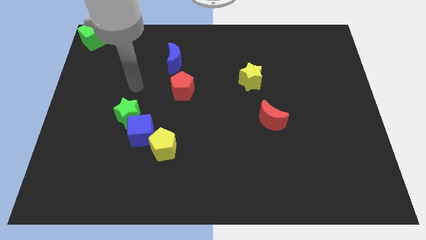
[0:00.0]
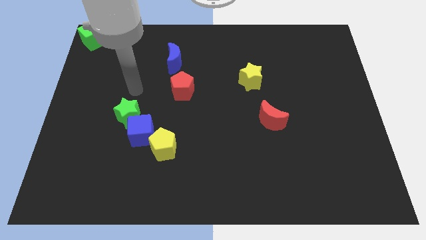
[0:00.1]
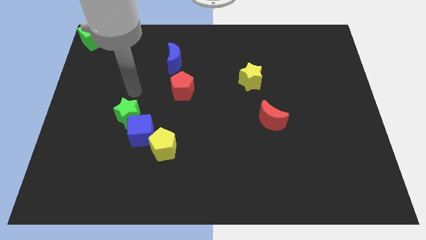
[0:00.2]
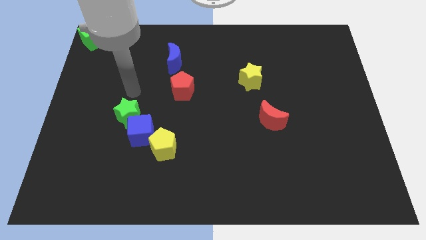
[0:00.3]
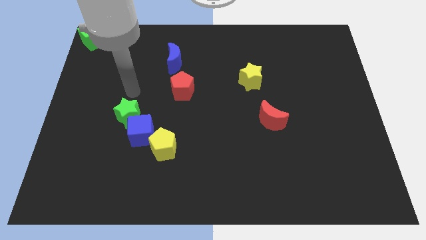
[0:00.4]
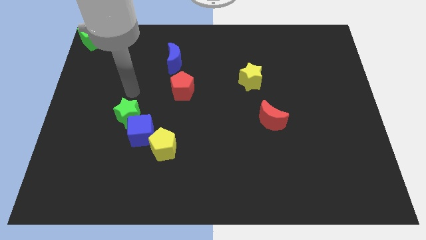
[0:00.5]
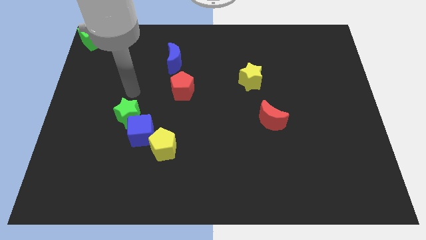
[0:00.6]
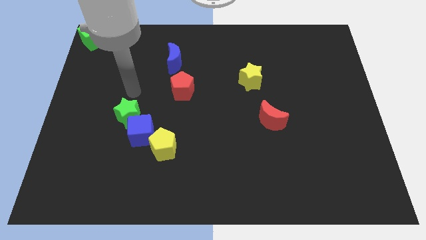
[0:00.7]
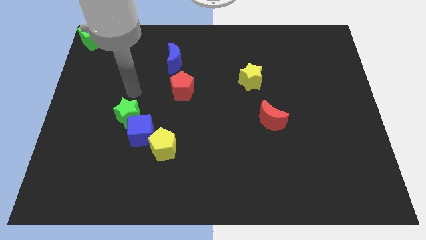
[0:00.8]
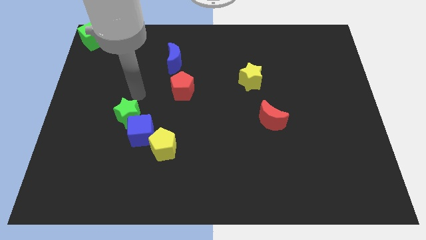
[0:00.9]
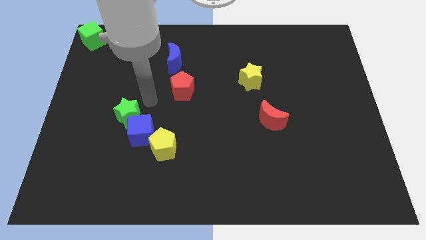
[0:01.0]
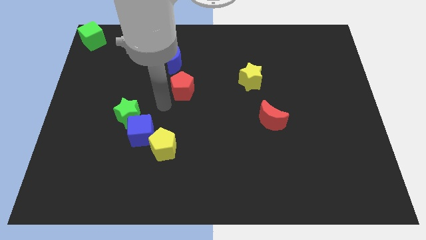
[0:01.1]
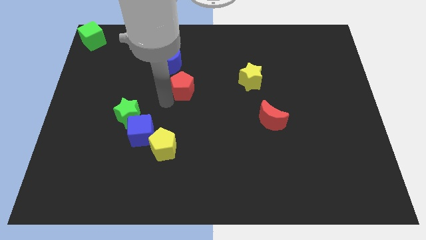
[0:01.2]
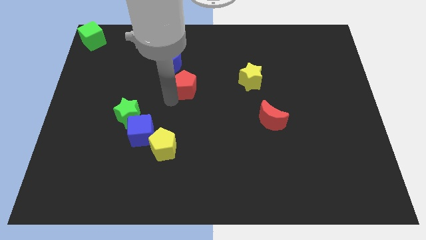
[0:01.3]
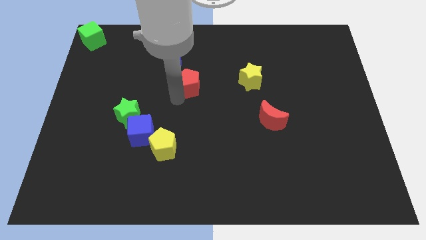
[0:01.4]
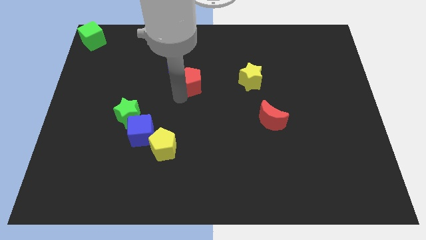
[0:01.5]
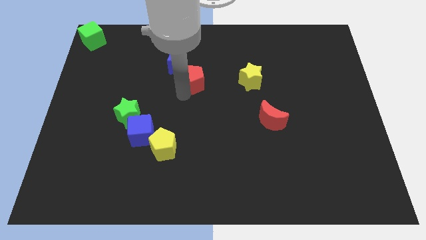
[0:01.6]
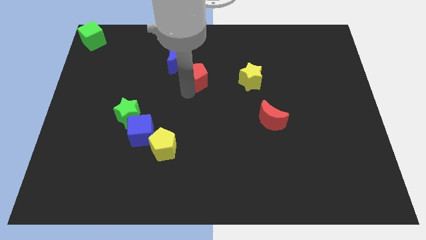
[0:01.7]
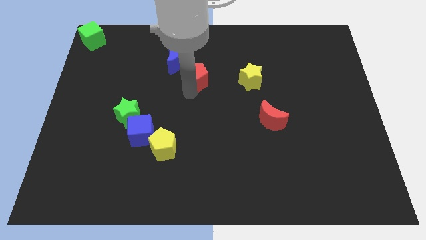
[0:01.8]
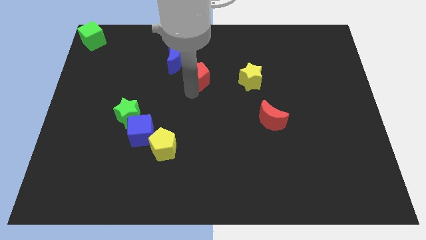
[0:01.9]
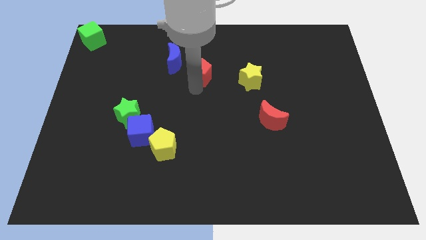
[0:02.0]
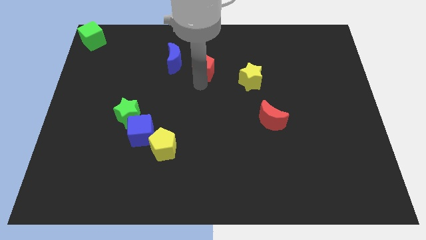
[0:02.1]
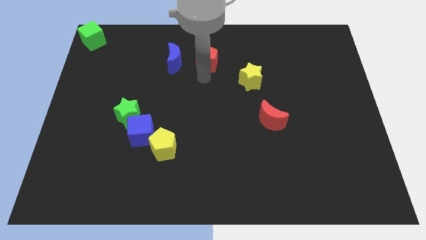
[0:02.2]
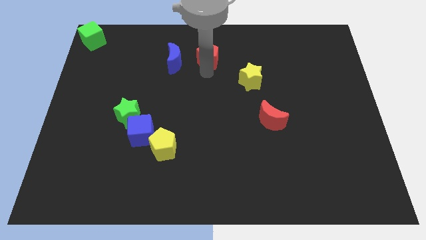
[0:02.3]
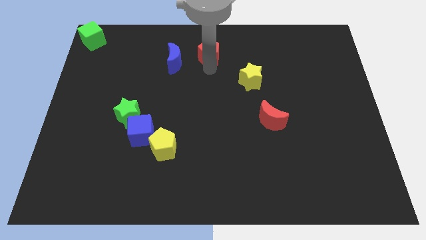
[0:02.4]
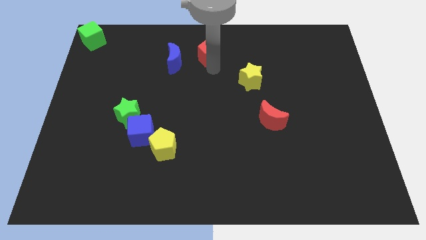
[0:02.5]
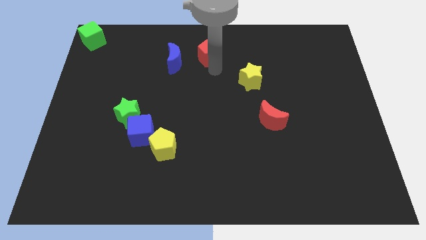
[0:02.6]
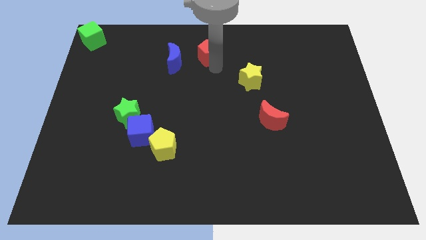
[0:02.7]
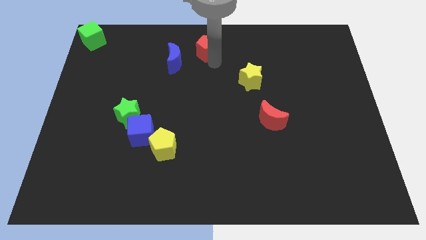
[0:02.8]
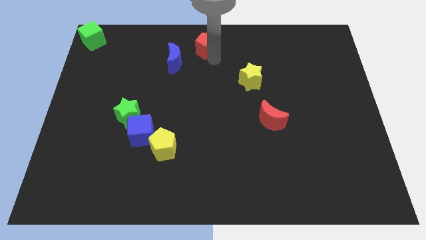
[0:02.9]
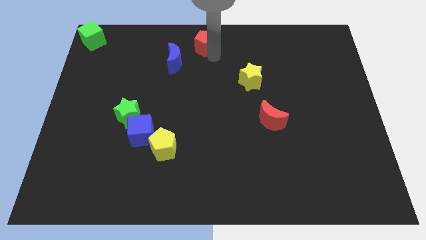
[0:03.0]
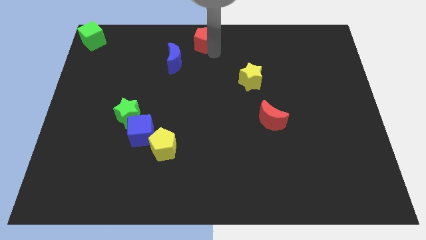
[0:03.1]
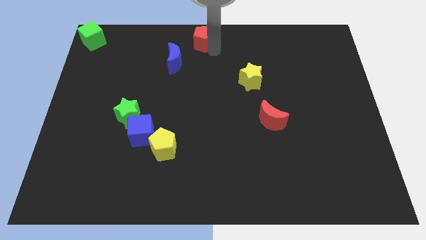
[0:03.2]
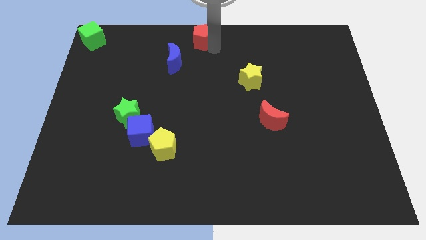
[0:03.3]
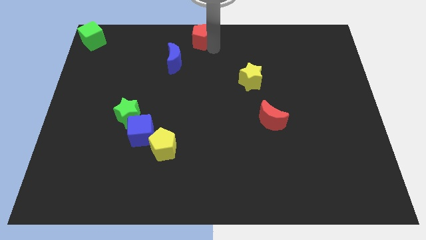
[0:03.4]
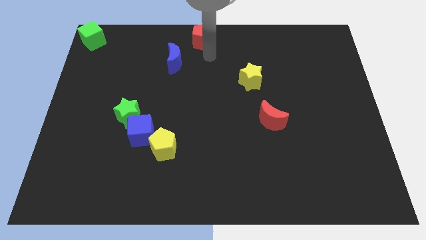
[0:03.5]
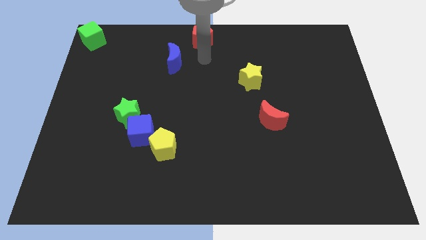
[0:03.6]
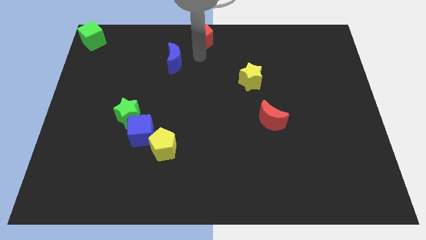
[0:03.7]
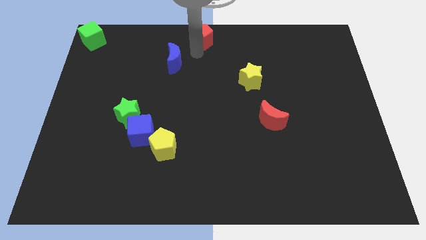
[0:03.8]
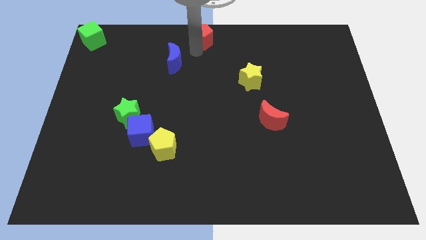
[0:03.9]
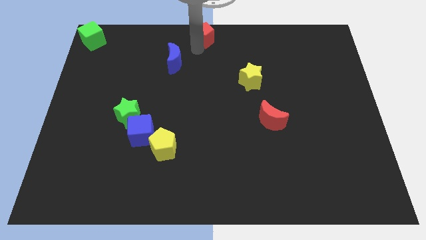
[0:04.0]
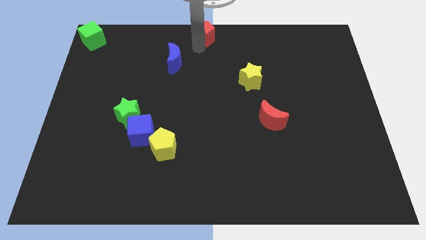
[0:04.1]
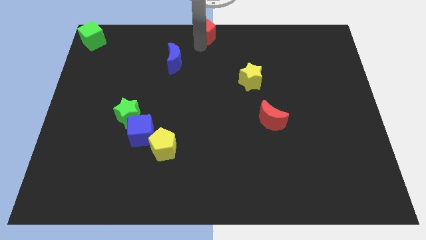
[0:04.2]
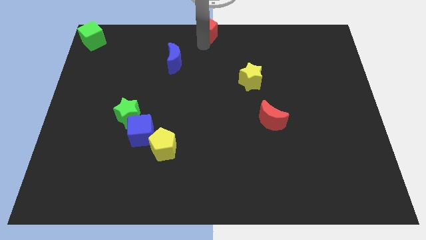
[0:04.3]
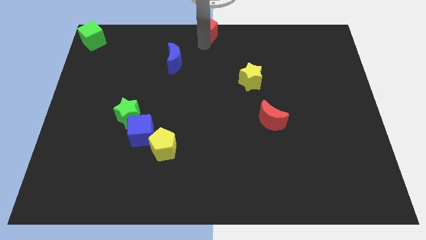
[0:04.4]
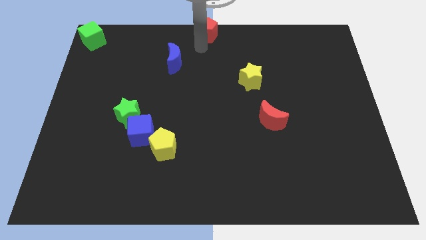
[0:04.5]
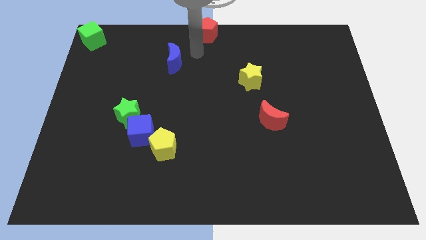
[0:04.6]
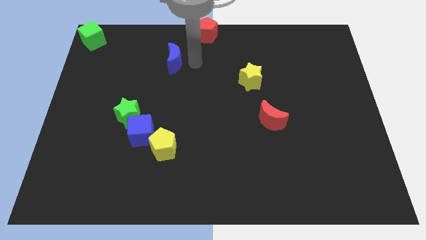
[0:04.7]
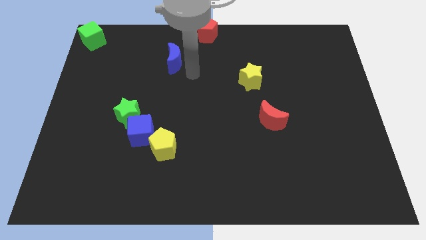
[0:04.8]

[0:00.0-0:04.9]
move the red pentagon to the top center of the board

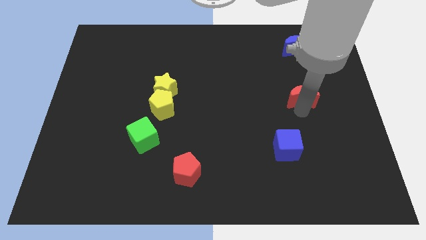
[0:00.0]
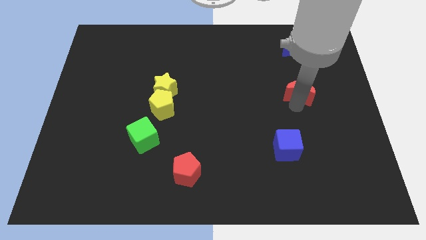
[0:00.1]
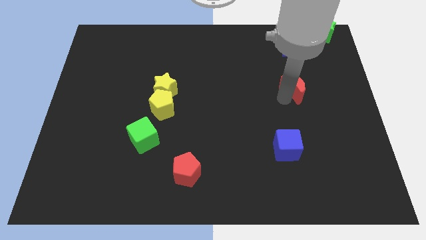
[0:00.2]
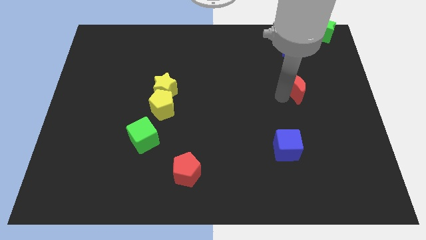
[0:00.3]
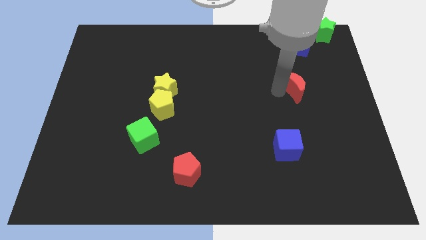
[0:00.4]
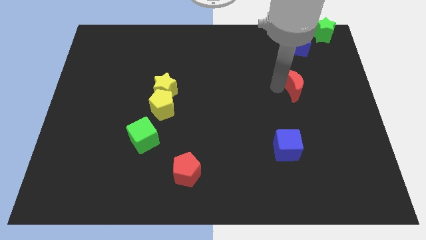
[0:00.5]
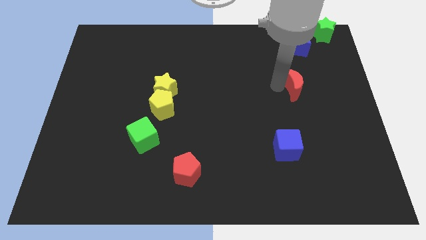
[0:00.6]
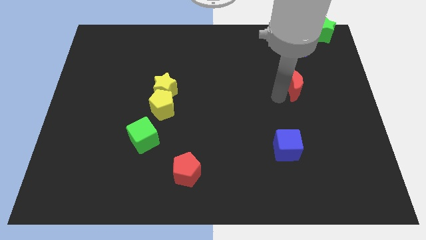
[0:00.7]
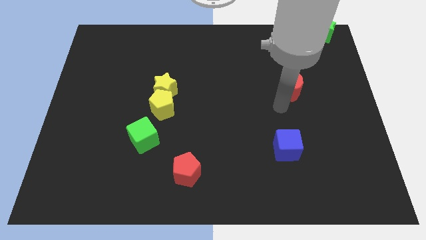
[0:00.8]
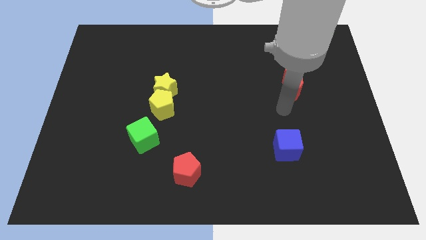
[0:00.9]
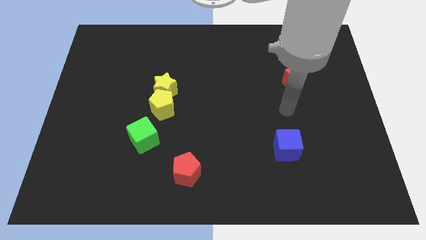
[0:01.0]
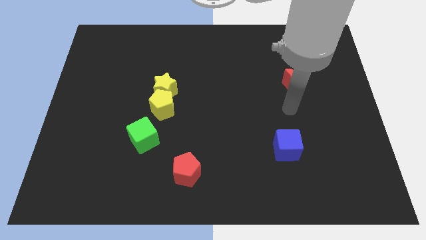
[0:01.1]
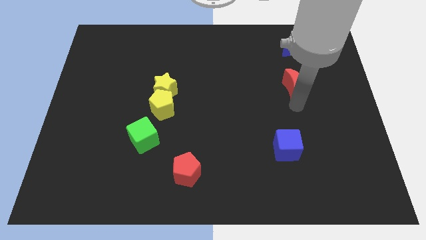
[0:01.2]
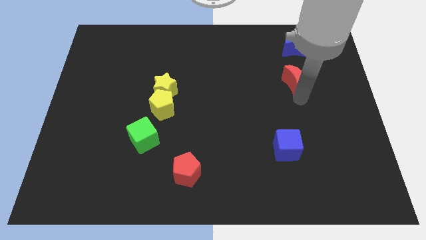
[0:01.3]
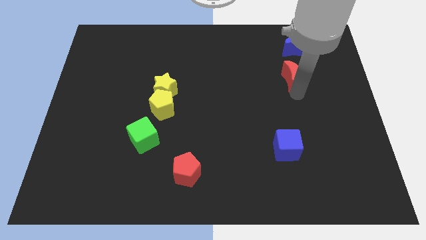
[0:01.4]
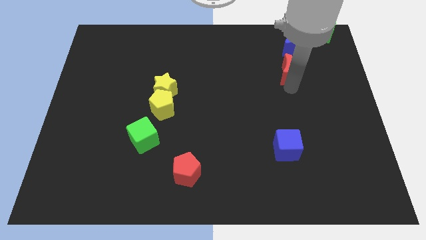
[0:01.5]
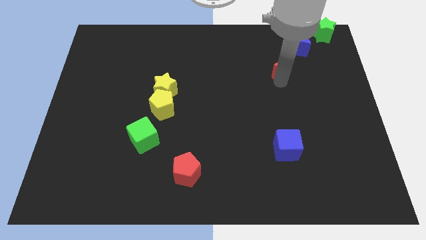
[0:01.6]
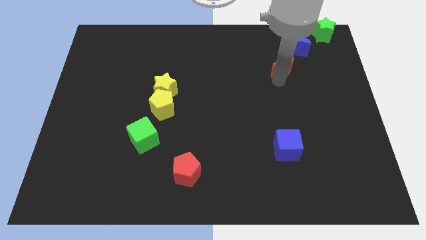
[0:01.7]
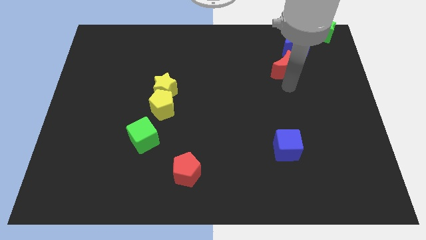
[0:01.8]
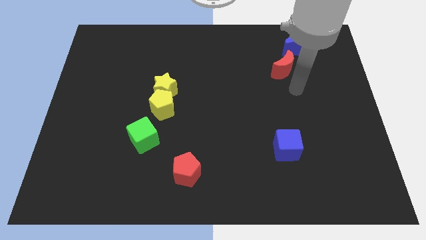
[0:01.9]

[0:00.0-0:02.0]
place the red moon to the left bottom of the blue moon

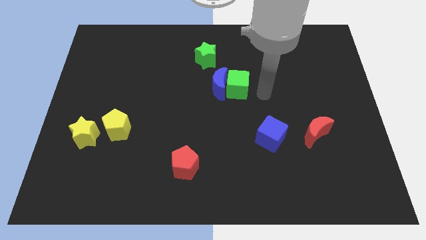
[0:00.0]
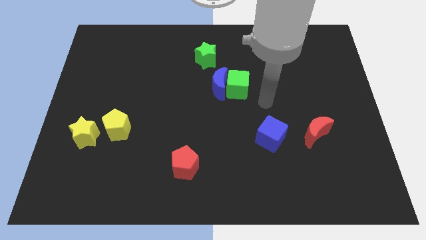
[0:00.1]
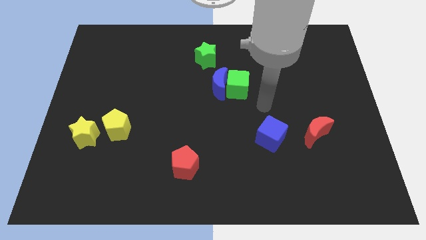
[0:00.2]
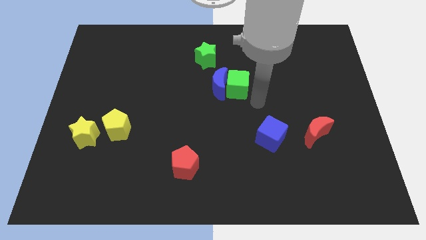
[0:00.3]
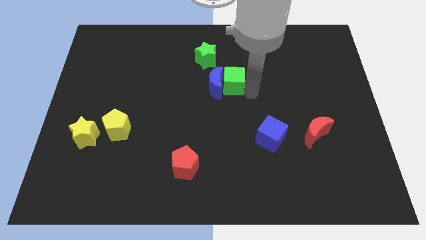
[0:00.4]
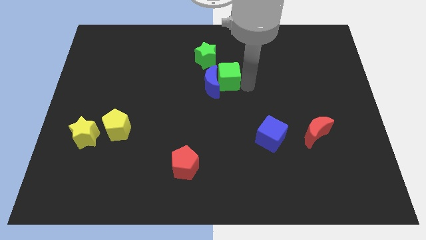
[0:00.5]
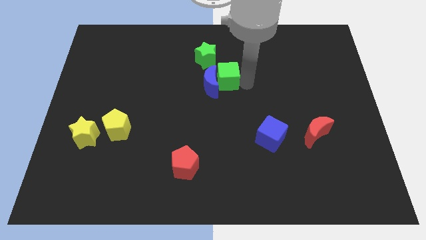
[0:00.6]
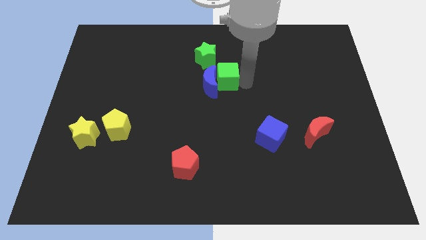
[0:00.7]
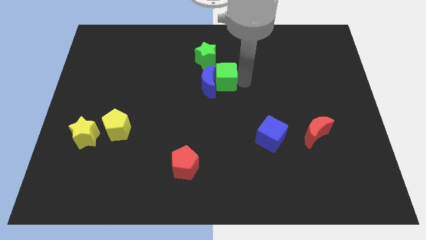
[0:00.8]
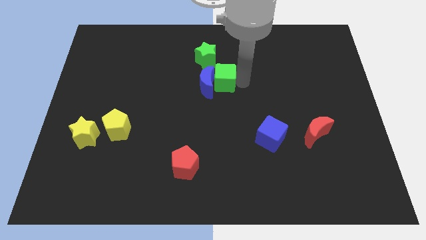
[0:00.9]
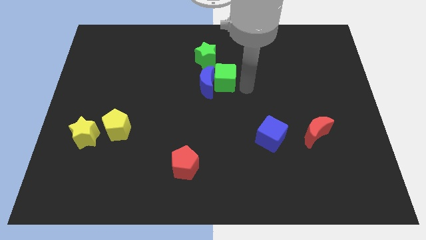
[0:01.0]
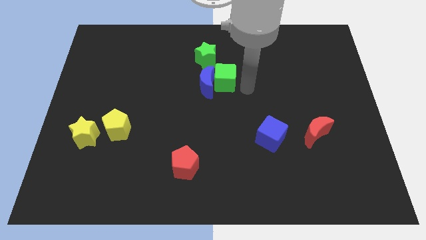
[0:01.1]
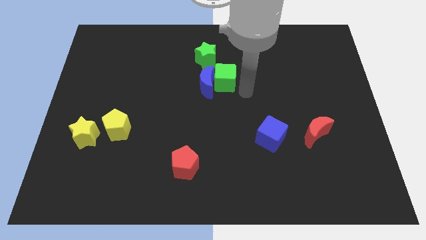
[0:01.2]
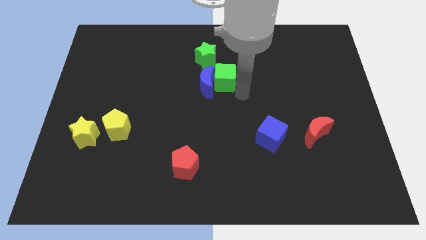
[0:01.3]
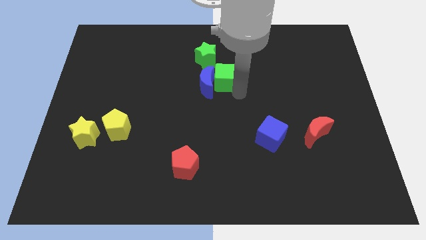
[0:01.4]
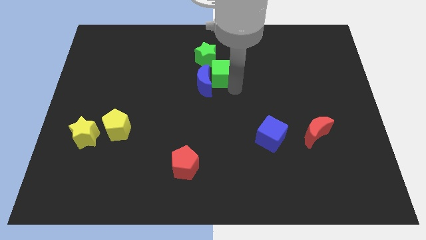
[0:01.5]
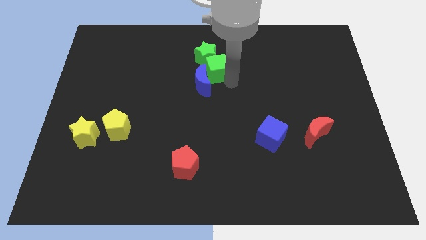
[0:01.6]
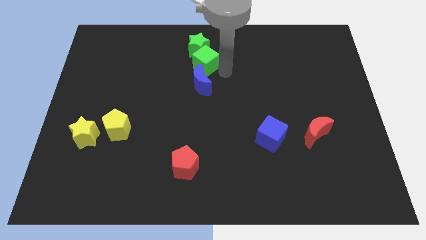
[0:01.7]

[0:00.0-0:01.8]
move the green cube to the bottom of the green star

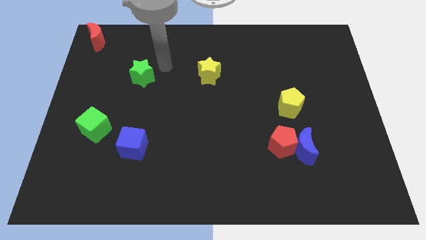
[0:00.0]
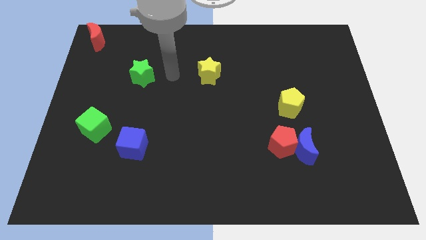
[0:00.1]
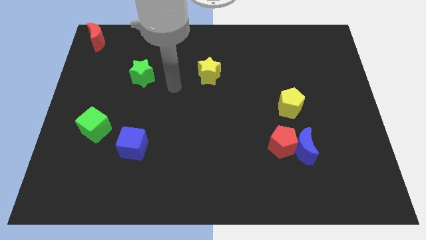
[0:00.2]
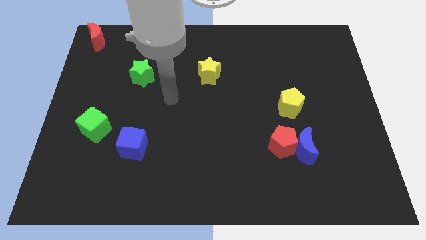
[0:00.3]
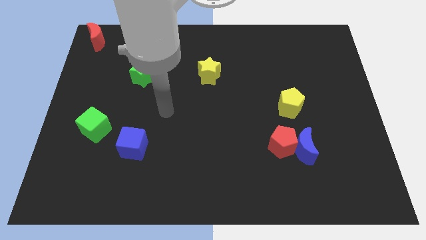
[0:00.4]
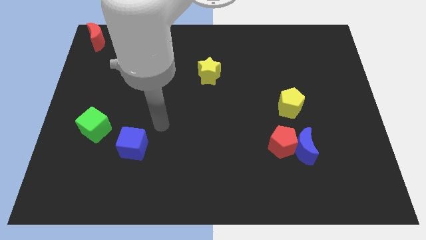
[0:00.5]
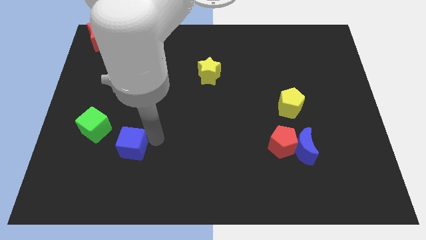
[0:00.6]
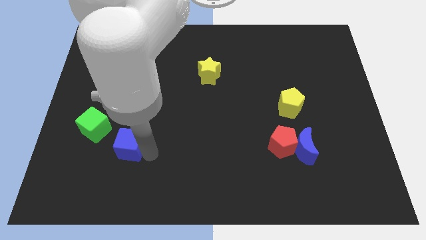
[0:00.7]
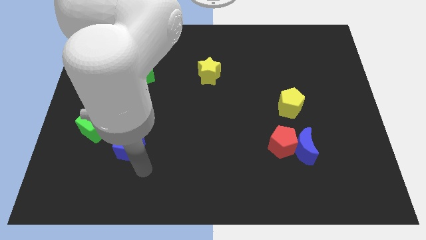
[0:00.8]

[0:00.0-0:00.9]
tap the blue cube
